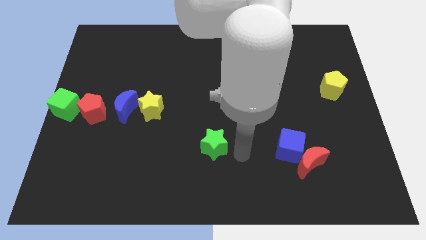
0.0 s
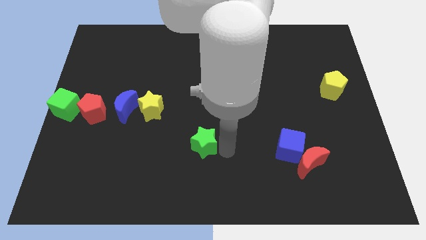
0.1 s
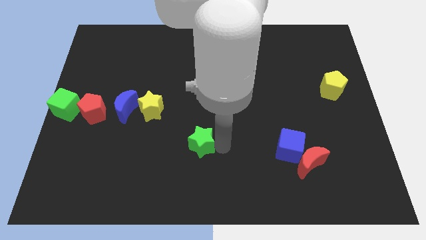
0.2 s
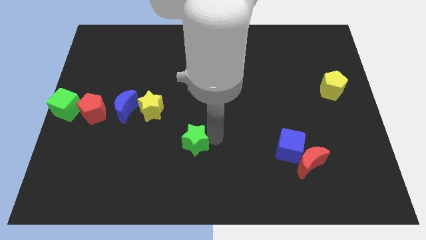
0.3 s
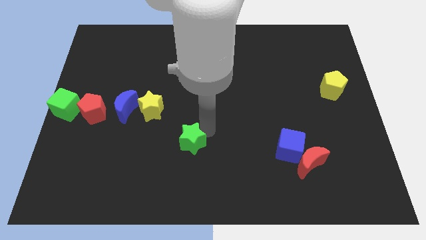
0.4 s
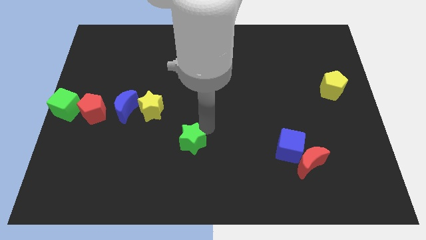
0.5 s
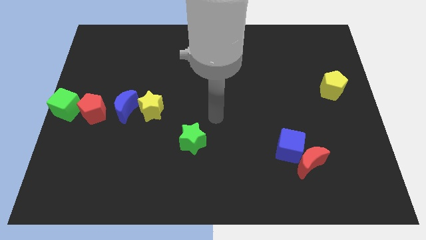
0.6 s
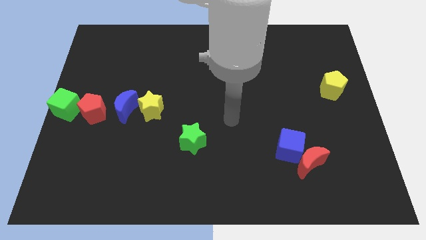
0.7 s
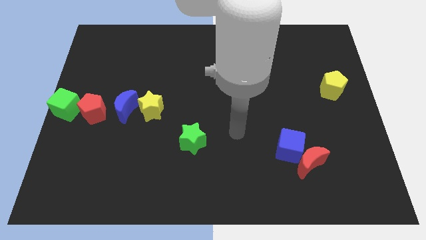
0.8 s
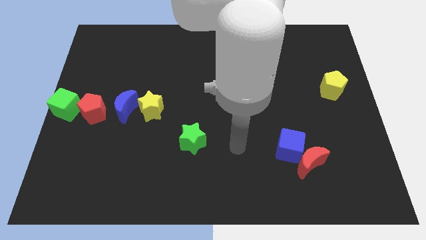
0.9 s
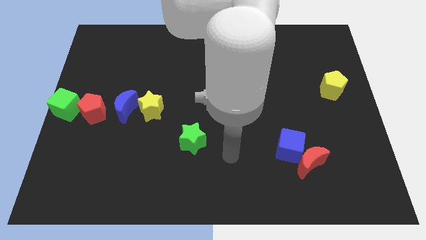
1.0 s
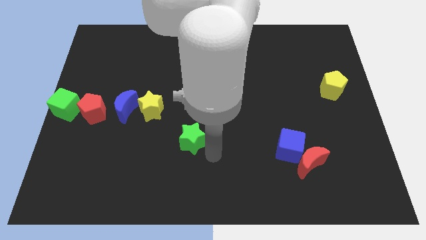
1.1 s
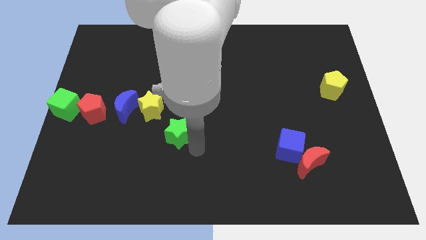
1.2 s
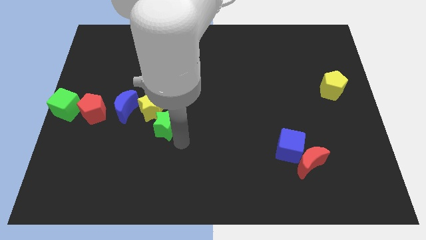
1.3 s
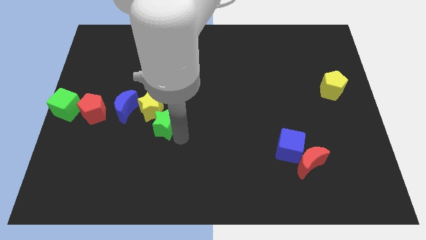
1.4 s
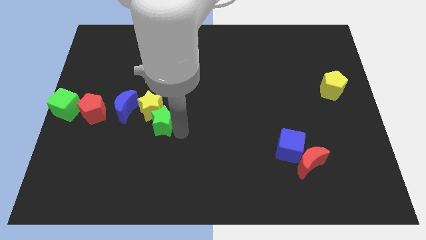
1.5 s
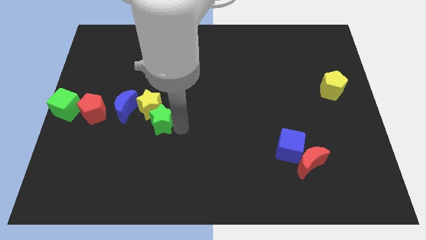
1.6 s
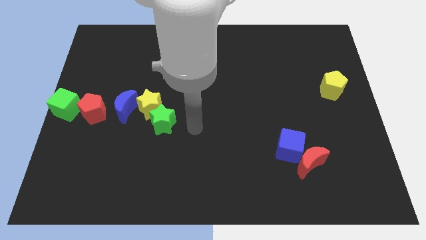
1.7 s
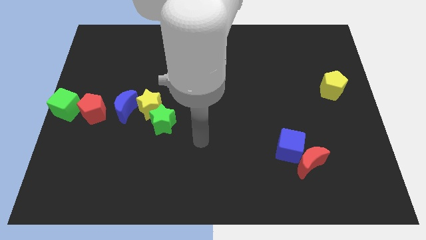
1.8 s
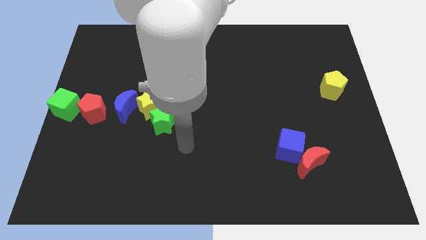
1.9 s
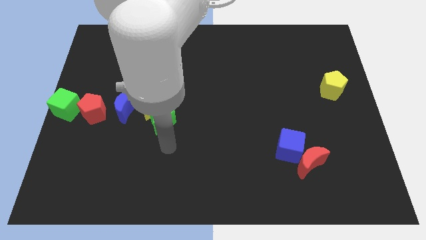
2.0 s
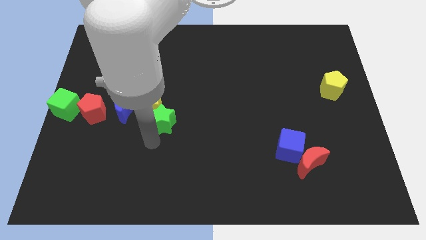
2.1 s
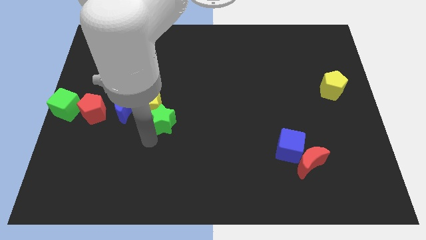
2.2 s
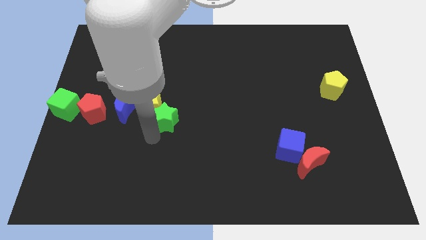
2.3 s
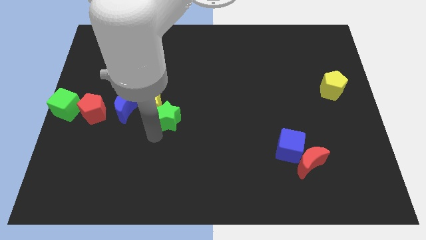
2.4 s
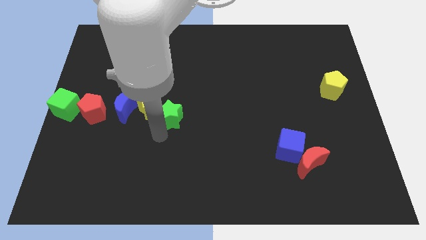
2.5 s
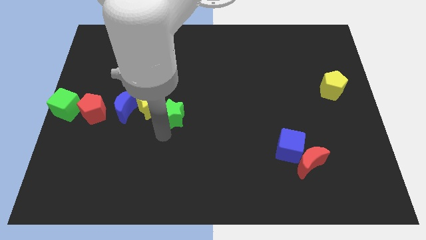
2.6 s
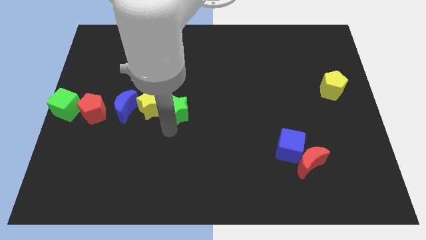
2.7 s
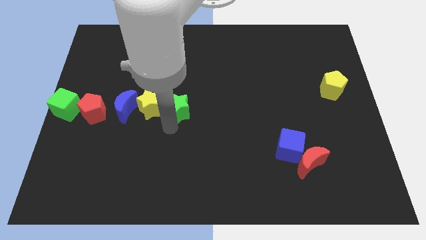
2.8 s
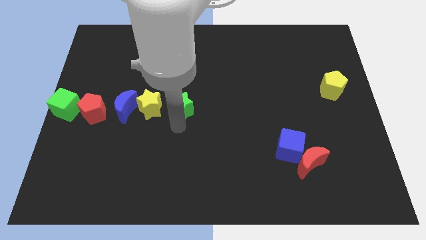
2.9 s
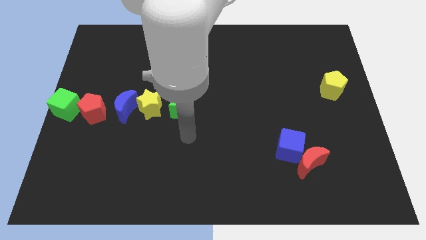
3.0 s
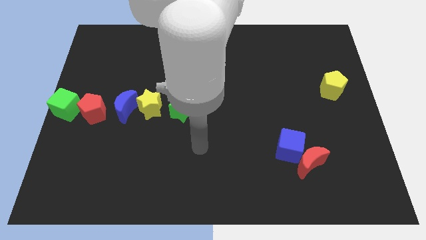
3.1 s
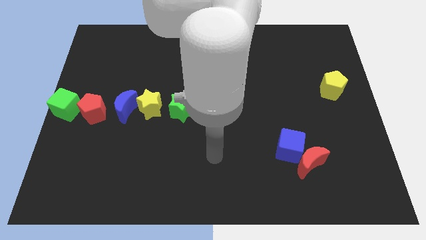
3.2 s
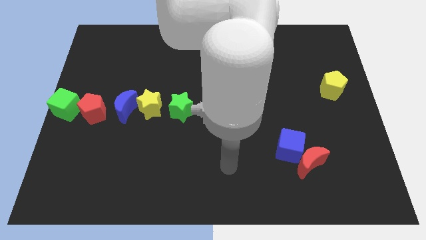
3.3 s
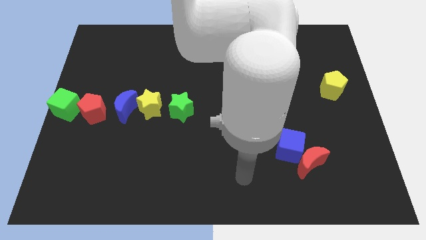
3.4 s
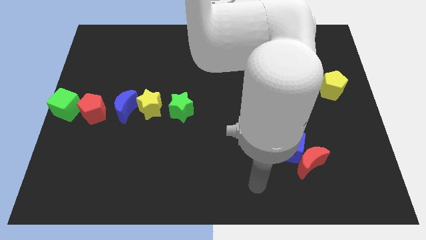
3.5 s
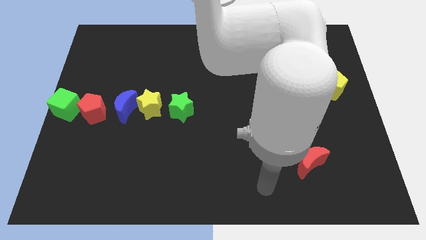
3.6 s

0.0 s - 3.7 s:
place the green star to the right of the yellow star

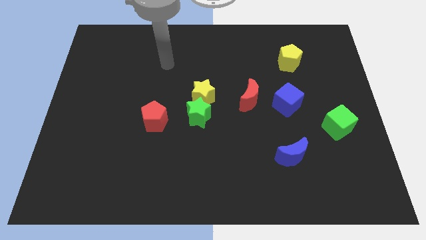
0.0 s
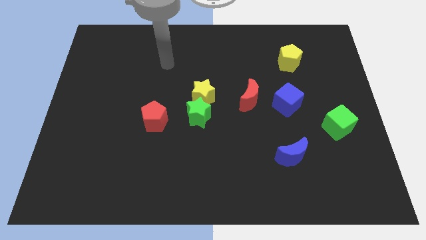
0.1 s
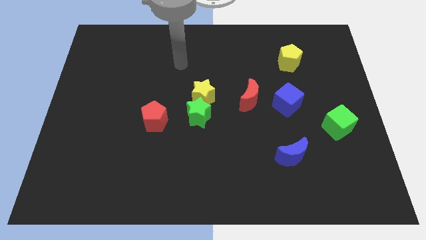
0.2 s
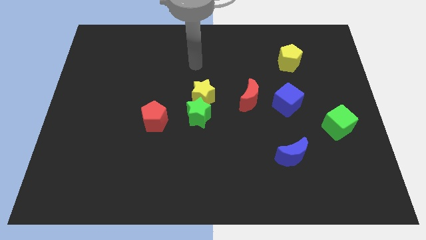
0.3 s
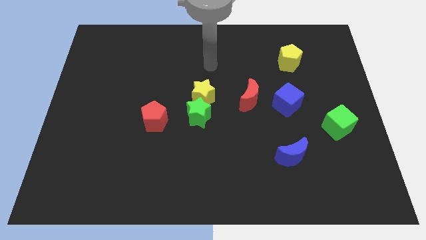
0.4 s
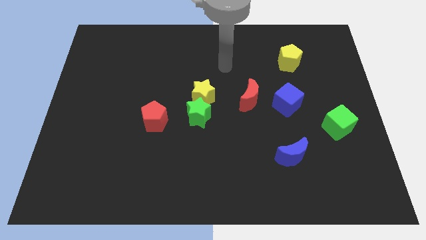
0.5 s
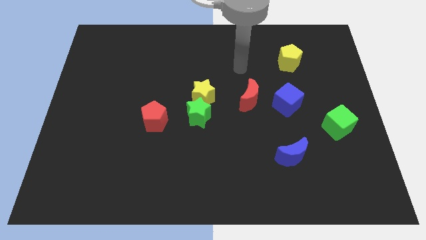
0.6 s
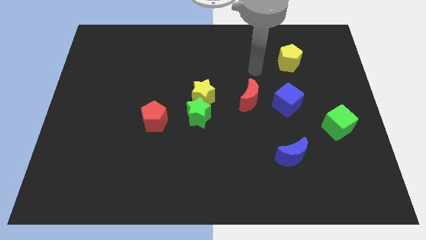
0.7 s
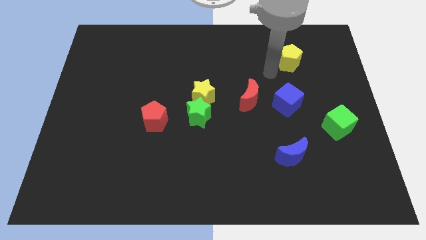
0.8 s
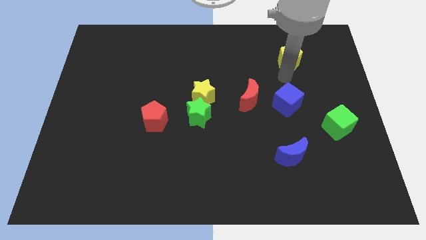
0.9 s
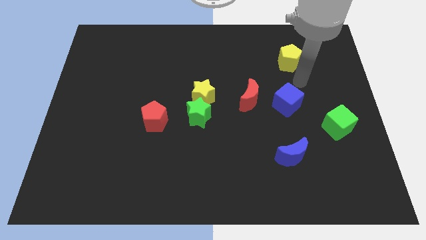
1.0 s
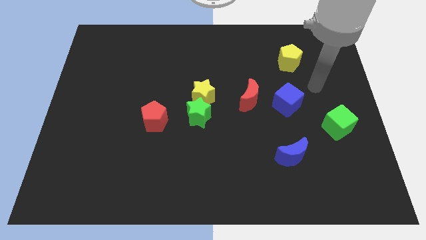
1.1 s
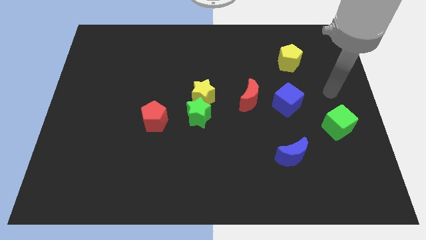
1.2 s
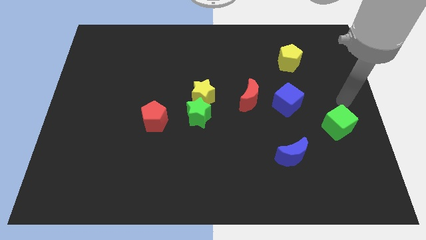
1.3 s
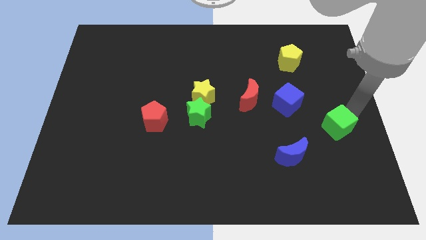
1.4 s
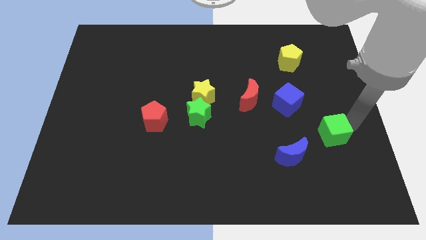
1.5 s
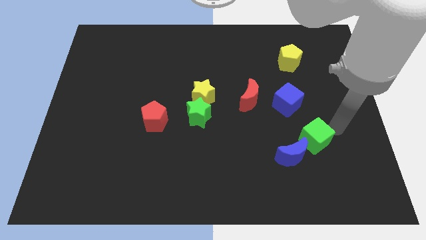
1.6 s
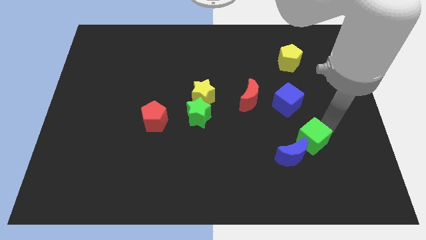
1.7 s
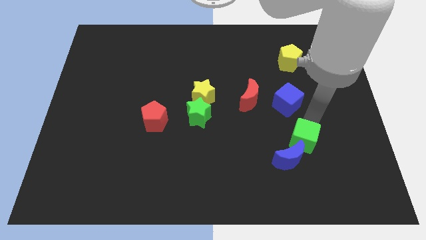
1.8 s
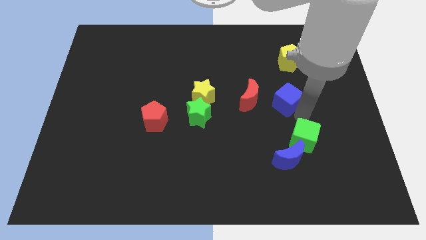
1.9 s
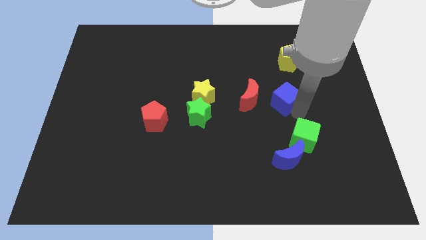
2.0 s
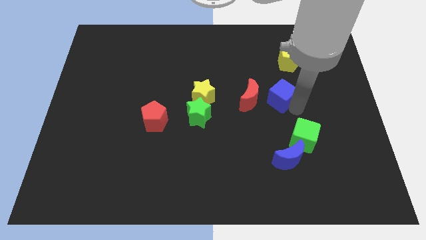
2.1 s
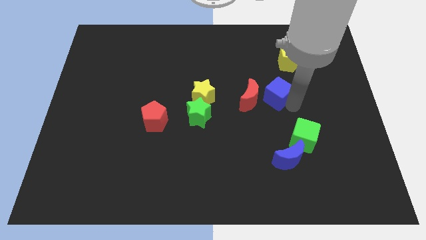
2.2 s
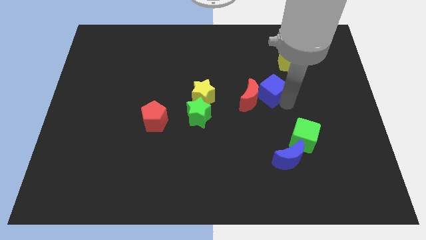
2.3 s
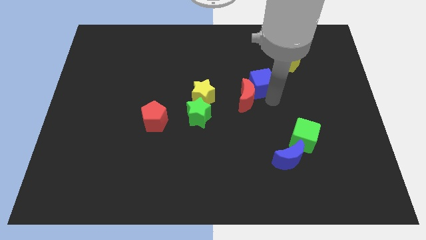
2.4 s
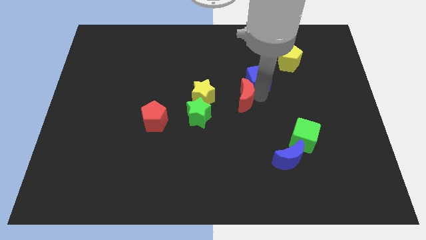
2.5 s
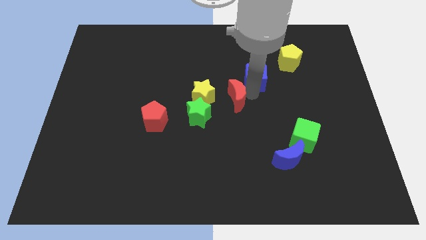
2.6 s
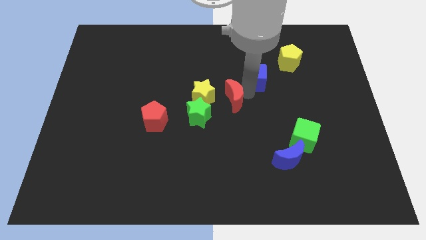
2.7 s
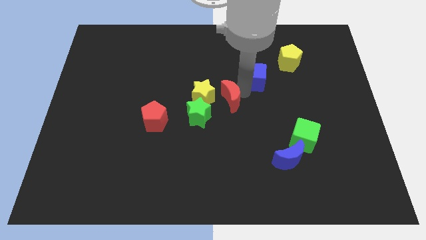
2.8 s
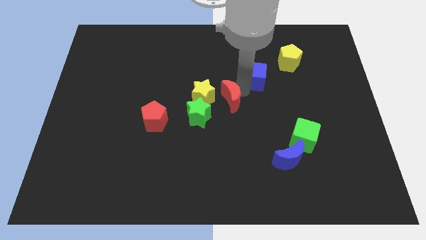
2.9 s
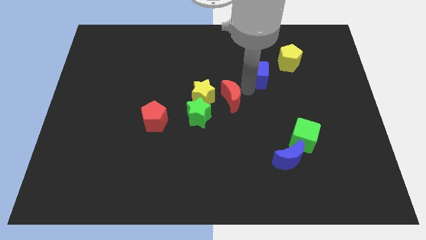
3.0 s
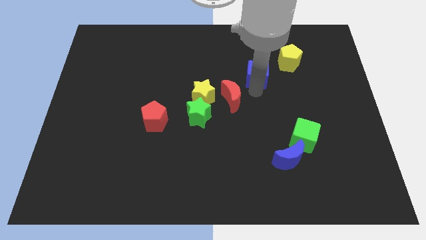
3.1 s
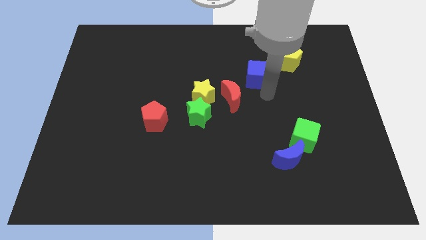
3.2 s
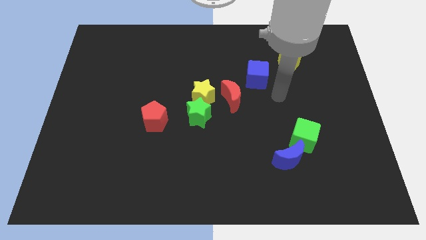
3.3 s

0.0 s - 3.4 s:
slide the red moon diagonal to blue moon

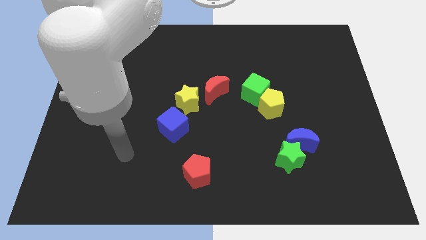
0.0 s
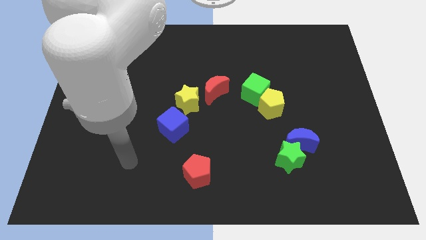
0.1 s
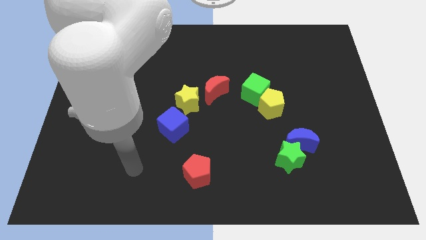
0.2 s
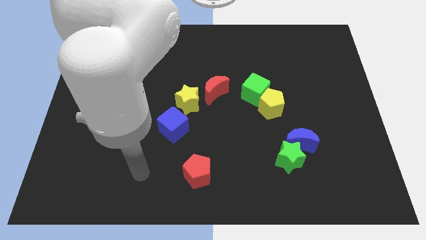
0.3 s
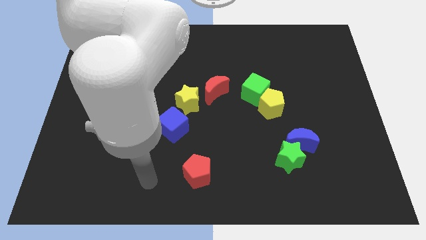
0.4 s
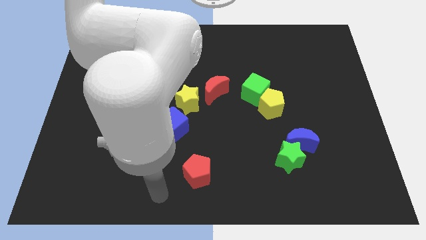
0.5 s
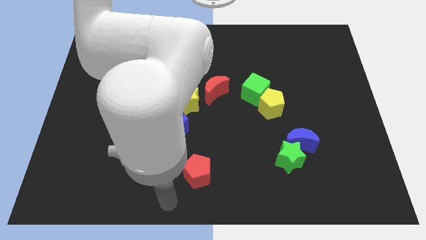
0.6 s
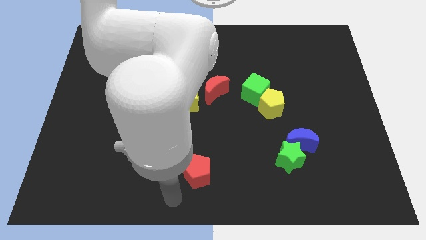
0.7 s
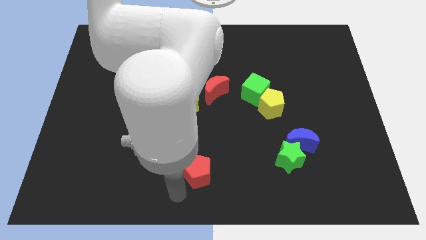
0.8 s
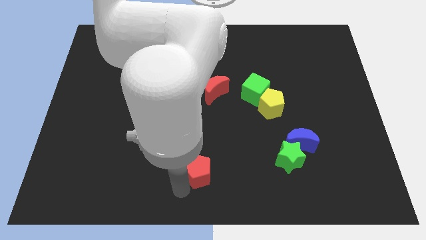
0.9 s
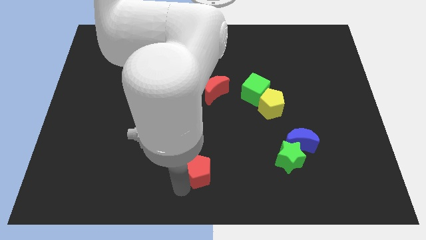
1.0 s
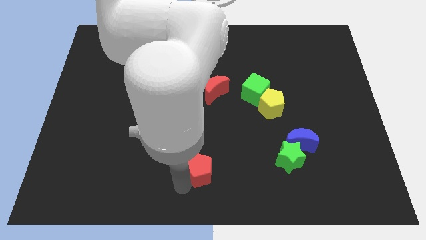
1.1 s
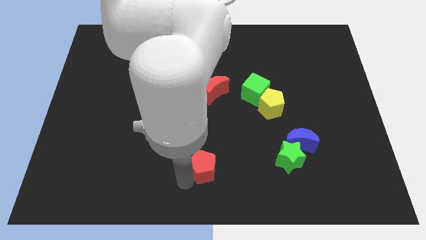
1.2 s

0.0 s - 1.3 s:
touch the red pentagon at the bottom

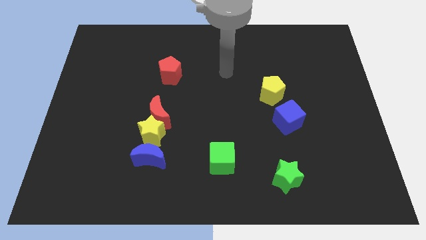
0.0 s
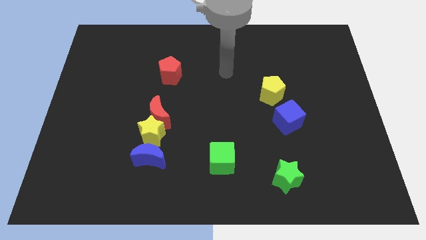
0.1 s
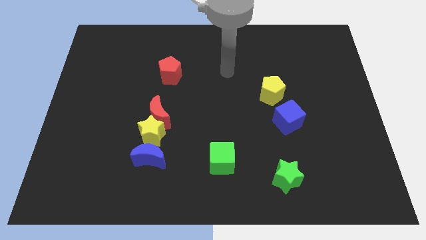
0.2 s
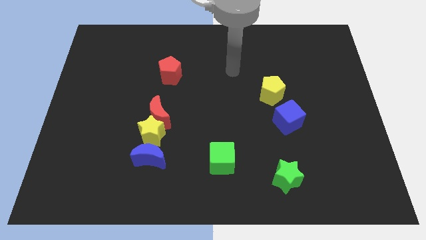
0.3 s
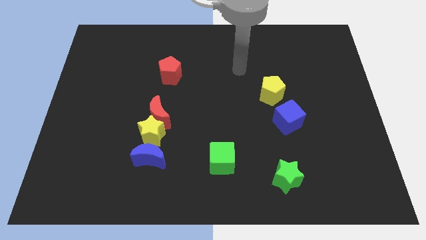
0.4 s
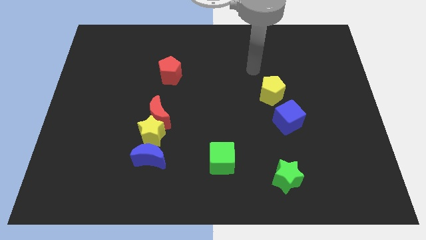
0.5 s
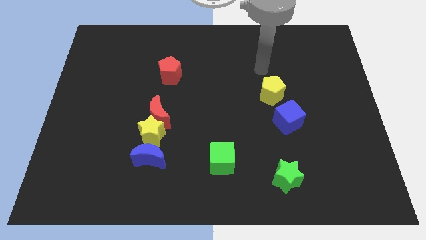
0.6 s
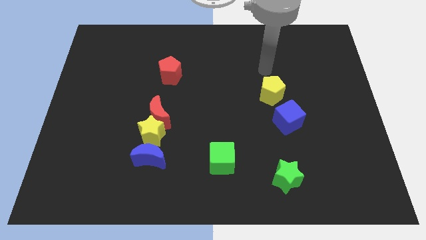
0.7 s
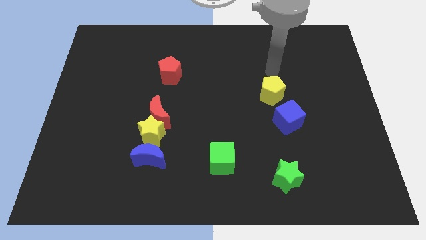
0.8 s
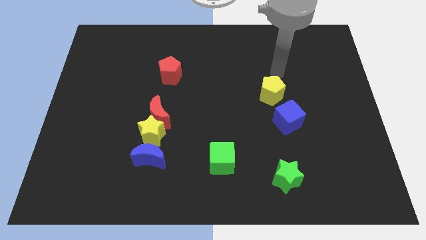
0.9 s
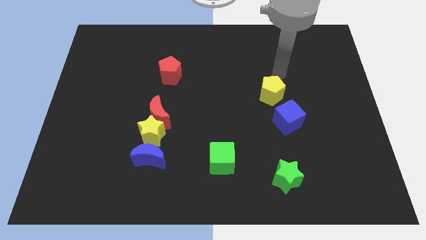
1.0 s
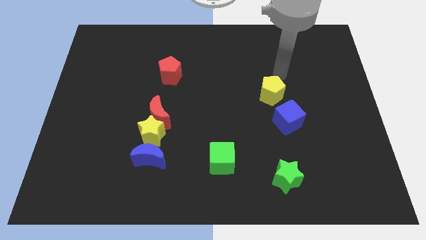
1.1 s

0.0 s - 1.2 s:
point your arm at the top of yellow pentagon
